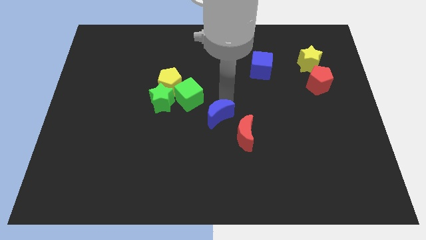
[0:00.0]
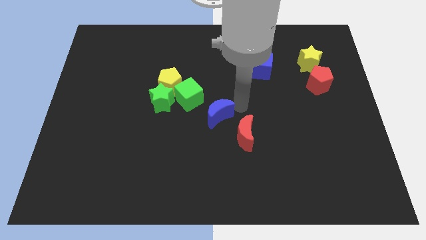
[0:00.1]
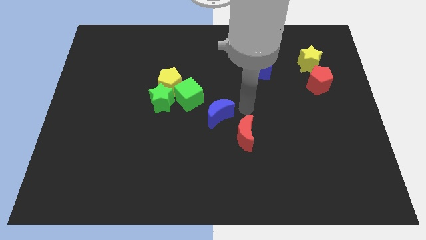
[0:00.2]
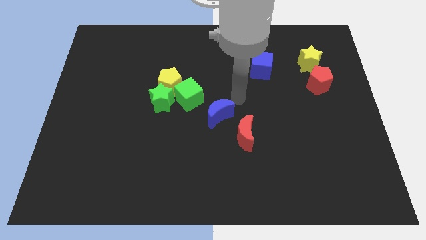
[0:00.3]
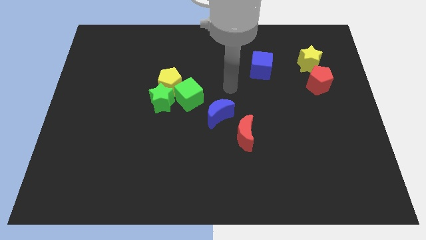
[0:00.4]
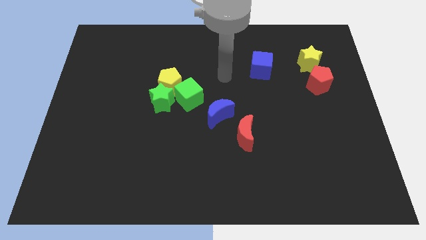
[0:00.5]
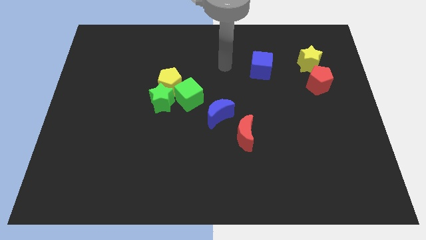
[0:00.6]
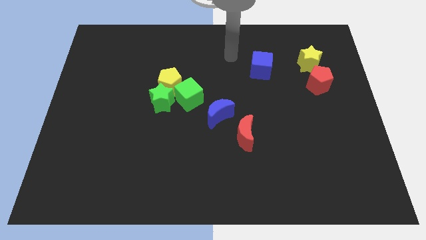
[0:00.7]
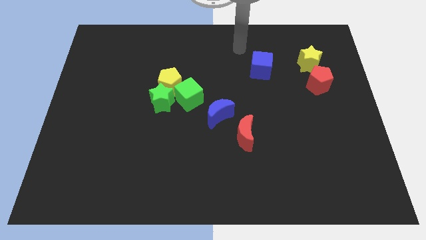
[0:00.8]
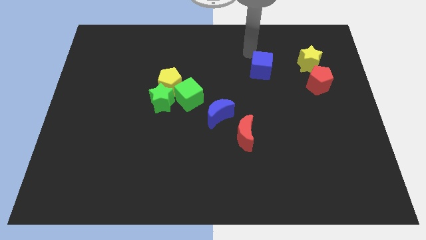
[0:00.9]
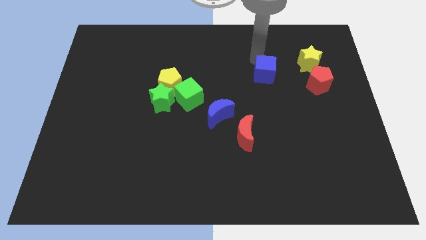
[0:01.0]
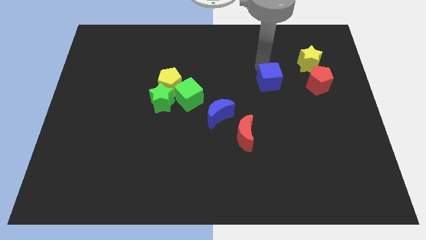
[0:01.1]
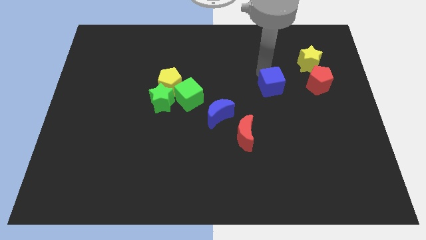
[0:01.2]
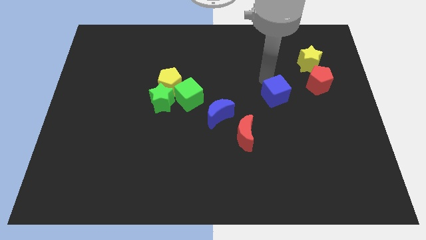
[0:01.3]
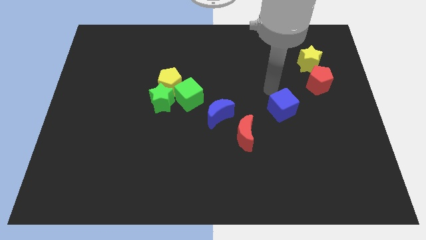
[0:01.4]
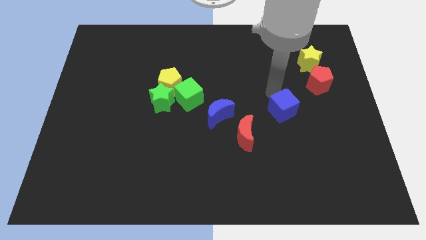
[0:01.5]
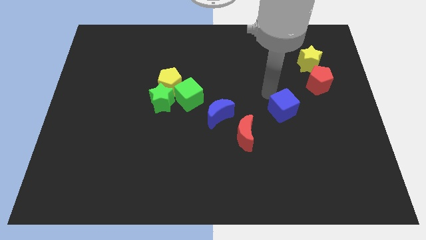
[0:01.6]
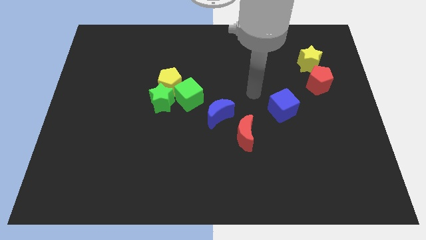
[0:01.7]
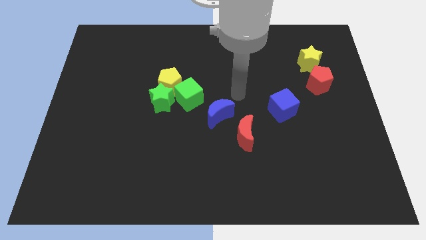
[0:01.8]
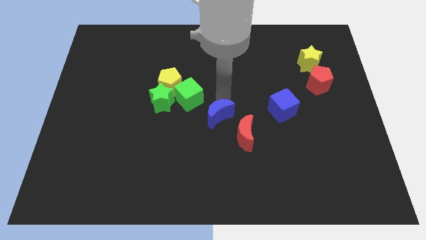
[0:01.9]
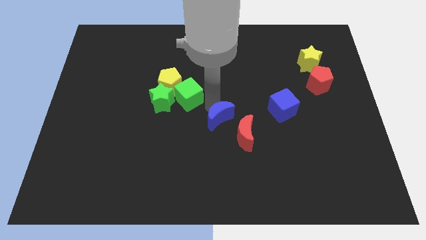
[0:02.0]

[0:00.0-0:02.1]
move the blue cube to the top right of the red crescent

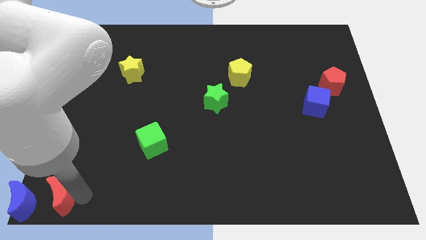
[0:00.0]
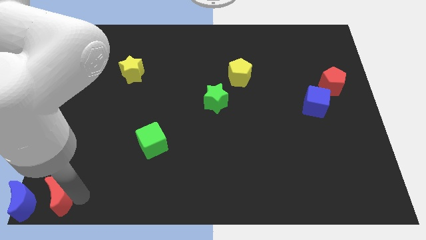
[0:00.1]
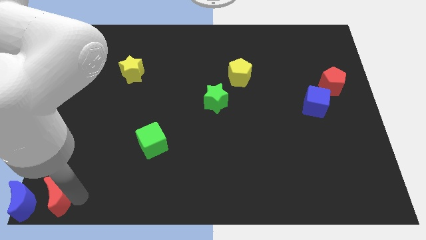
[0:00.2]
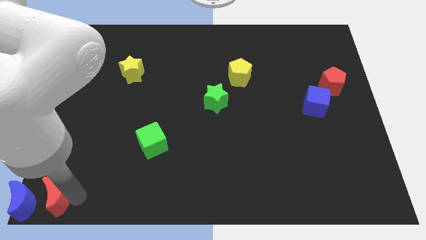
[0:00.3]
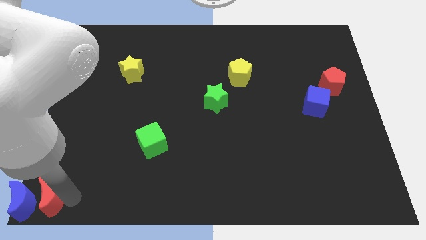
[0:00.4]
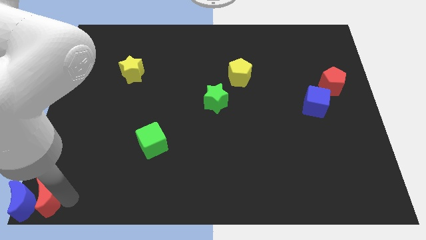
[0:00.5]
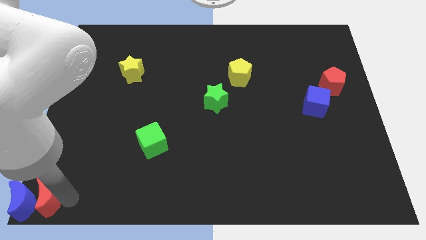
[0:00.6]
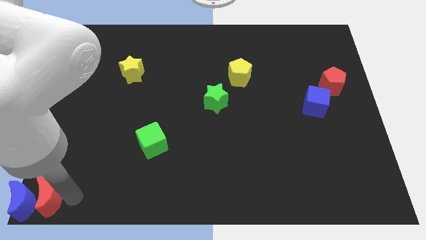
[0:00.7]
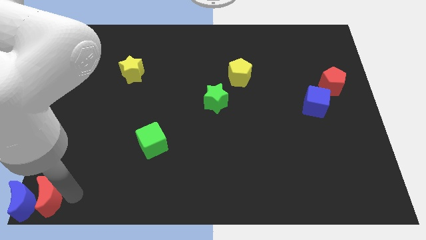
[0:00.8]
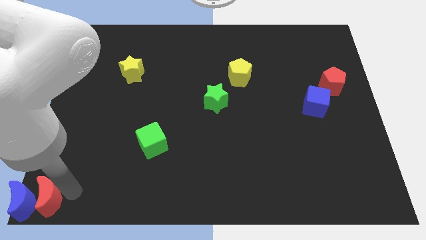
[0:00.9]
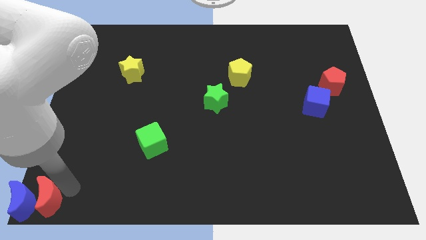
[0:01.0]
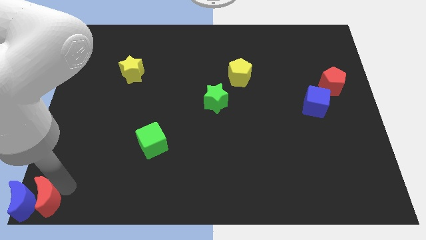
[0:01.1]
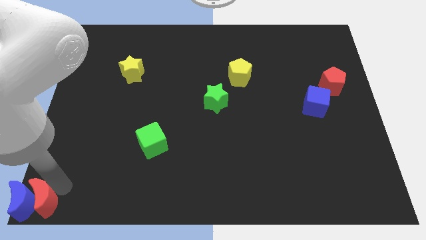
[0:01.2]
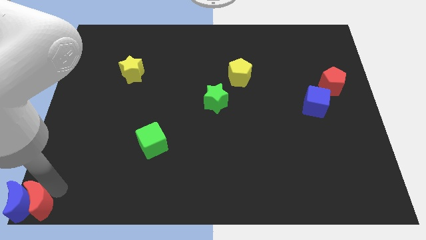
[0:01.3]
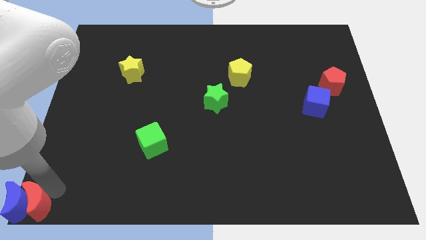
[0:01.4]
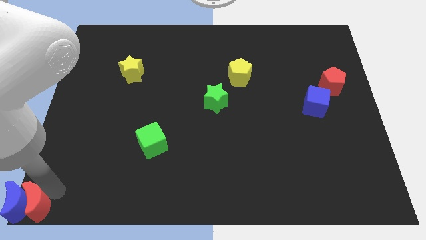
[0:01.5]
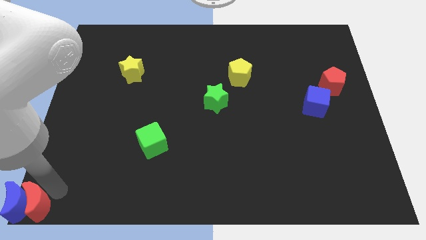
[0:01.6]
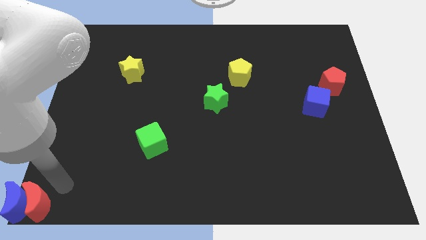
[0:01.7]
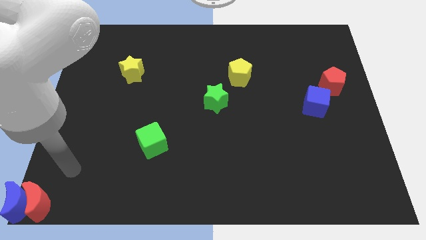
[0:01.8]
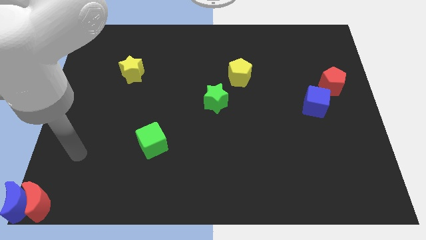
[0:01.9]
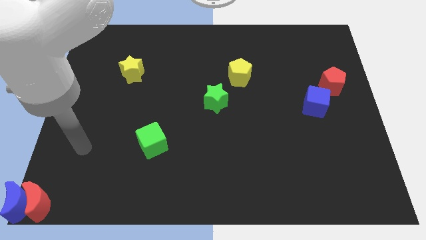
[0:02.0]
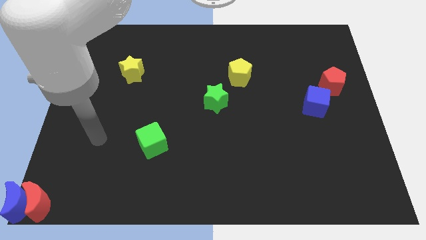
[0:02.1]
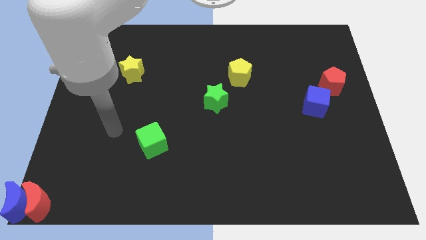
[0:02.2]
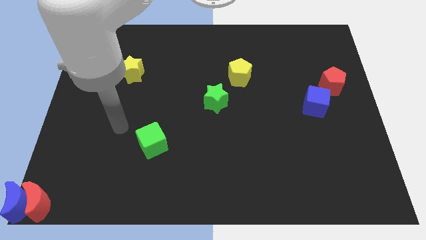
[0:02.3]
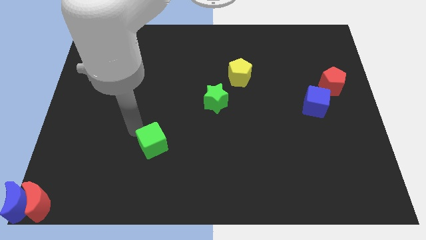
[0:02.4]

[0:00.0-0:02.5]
move the red crescent to the right side of the blue crescent

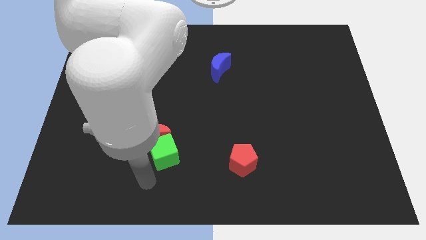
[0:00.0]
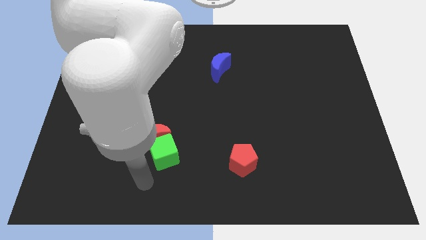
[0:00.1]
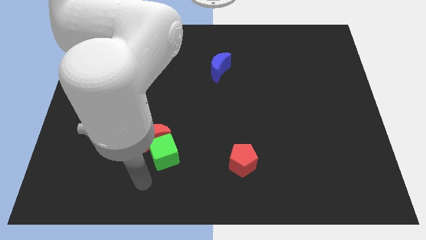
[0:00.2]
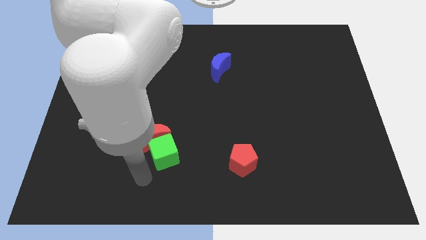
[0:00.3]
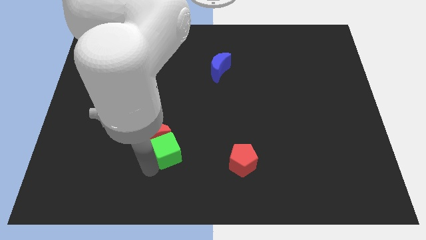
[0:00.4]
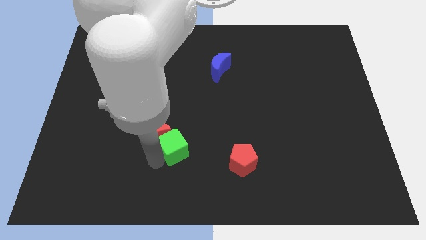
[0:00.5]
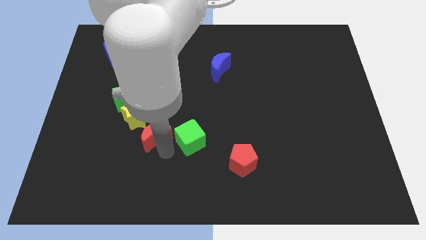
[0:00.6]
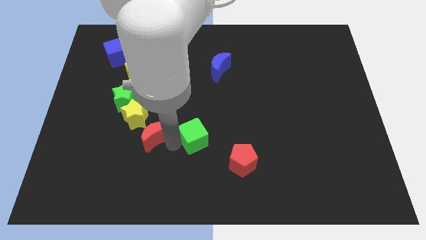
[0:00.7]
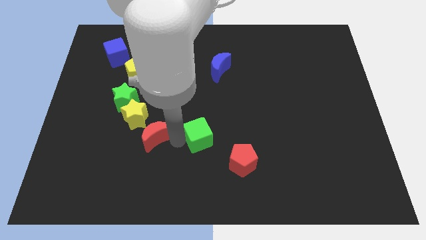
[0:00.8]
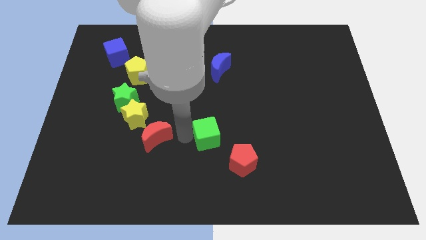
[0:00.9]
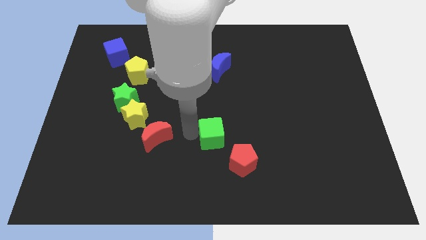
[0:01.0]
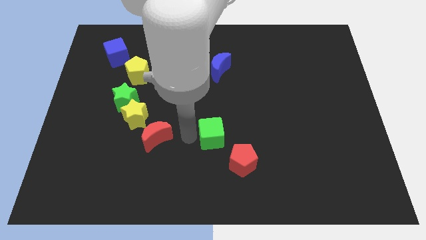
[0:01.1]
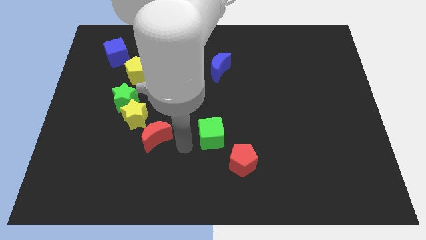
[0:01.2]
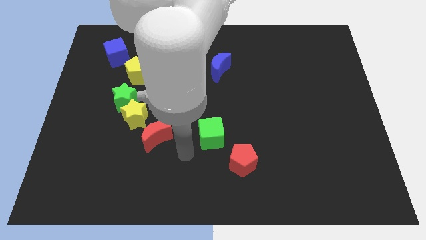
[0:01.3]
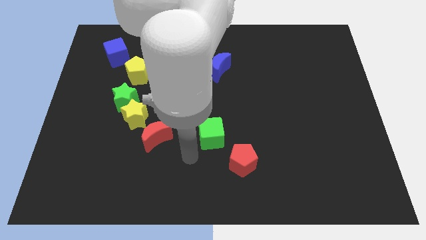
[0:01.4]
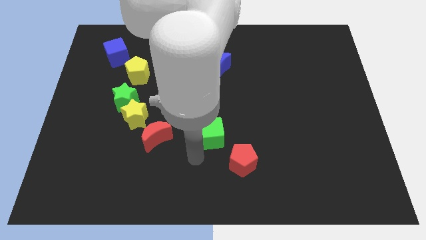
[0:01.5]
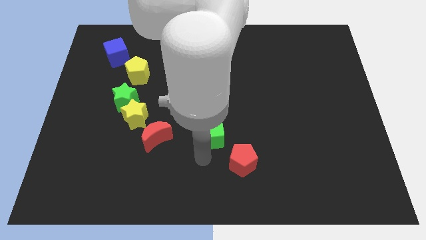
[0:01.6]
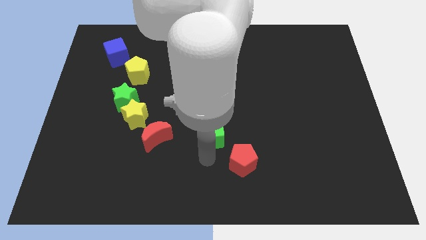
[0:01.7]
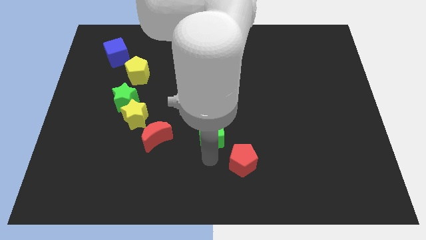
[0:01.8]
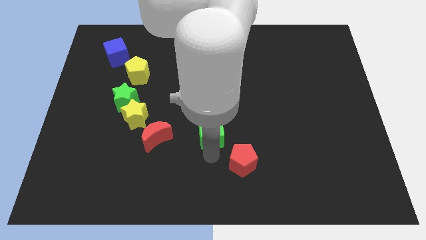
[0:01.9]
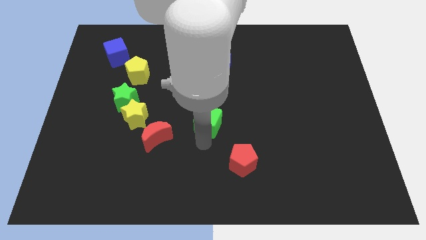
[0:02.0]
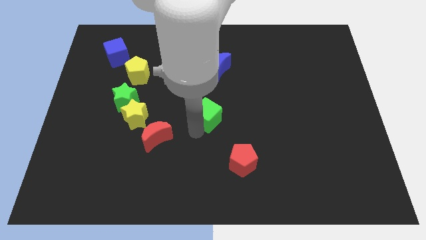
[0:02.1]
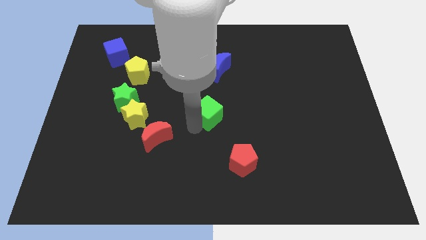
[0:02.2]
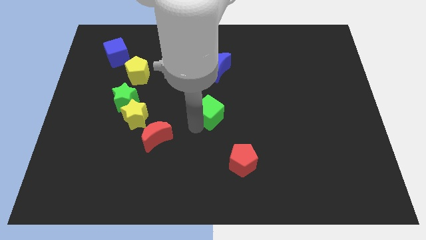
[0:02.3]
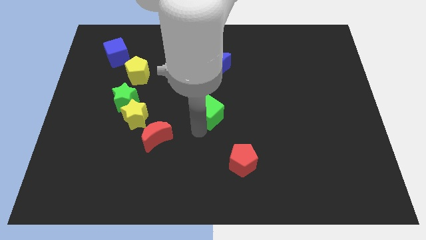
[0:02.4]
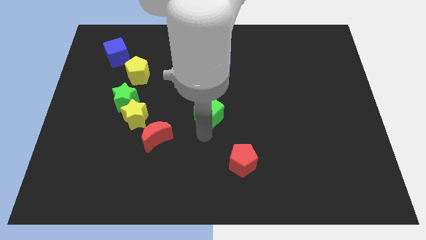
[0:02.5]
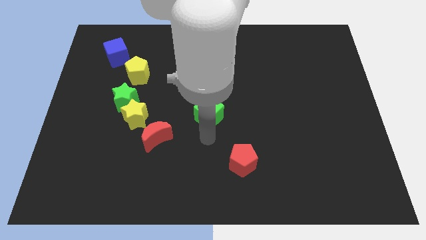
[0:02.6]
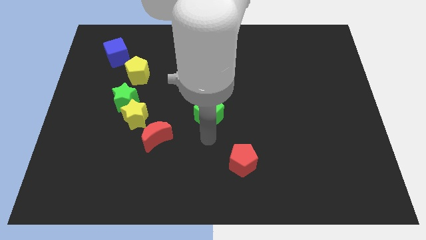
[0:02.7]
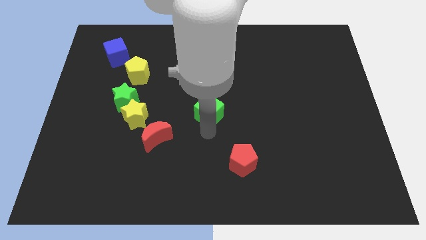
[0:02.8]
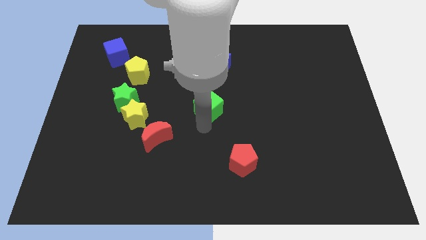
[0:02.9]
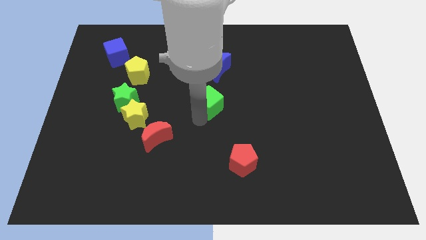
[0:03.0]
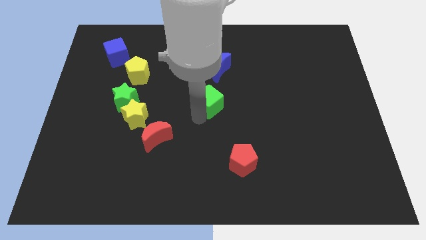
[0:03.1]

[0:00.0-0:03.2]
push the green cube to the center of the board

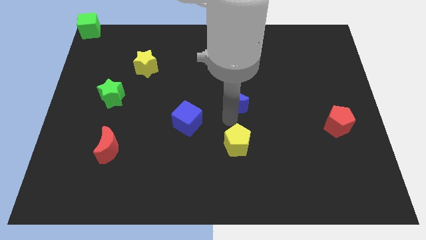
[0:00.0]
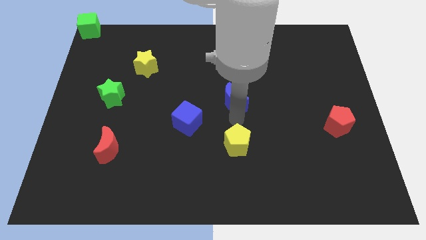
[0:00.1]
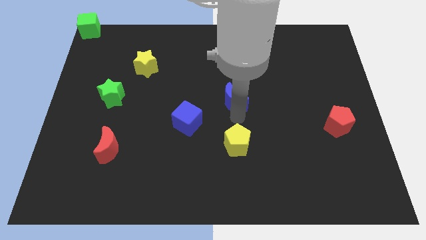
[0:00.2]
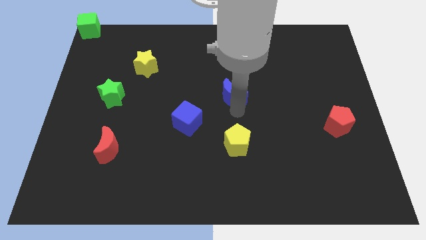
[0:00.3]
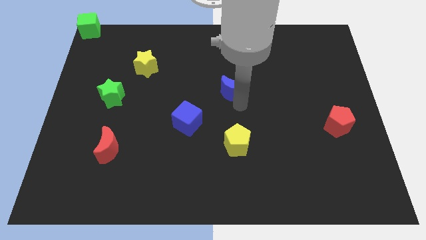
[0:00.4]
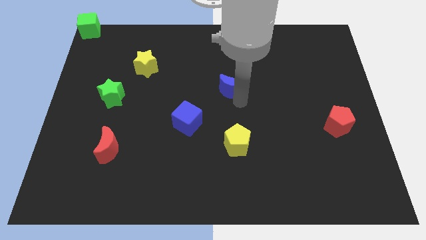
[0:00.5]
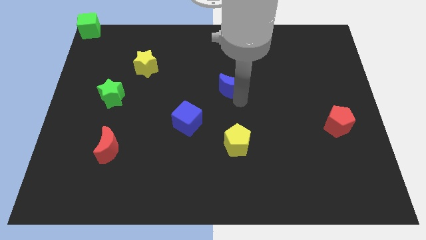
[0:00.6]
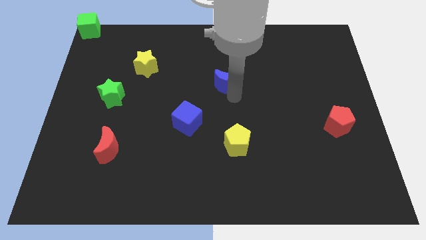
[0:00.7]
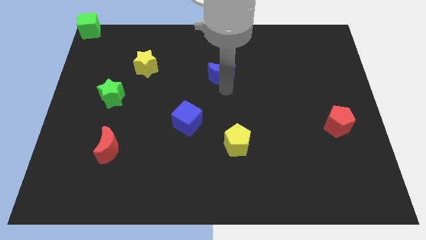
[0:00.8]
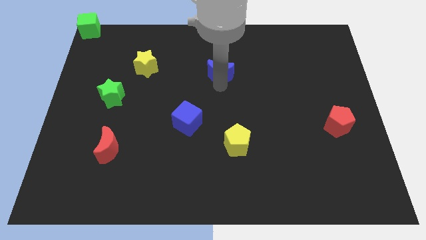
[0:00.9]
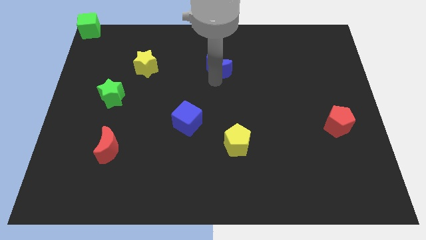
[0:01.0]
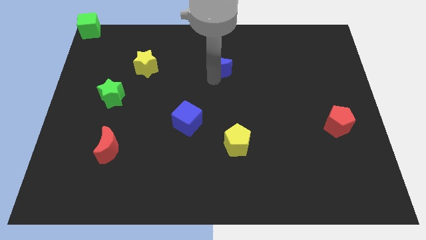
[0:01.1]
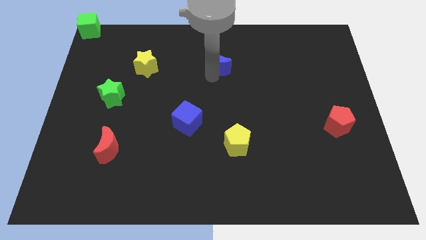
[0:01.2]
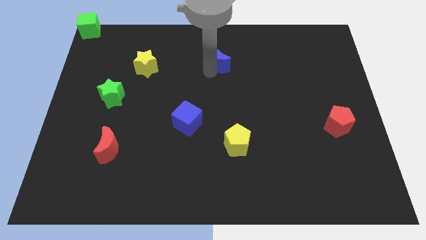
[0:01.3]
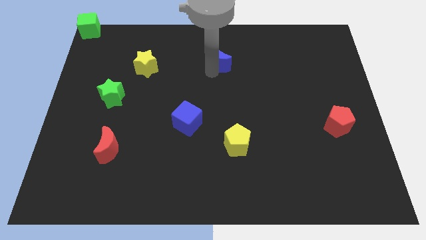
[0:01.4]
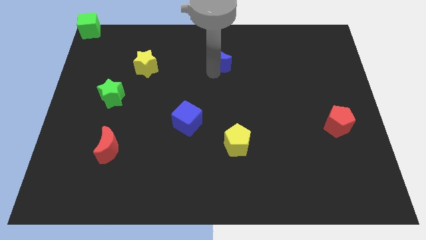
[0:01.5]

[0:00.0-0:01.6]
move the blue moon right to the yellow star
